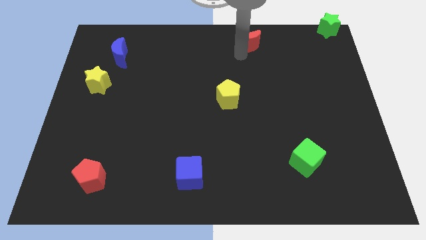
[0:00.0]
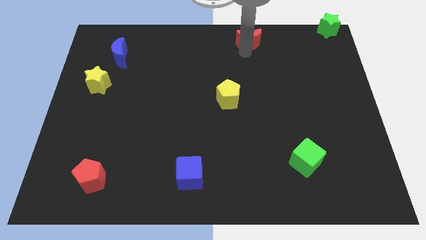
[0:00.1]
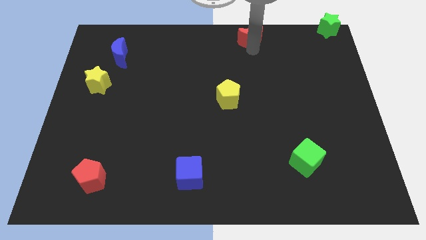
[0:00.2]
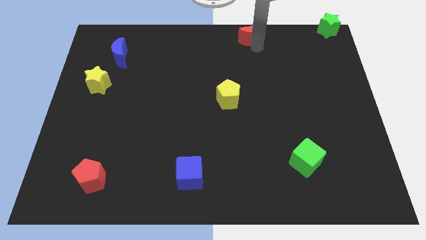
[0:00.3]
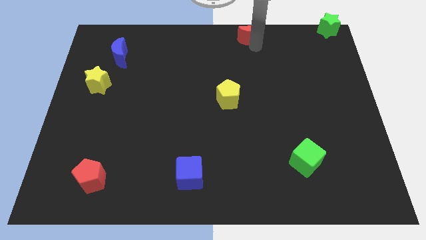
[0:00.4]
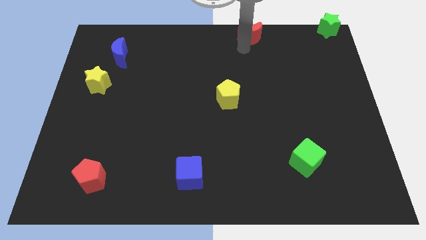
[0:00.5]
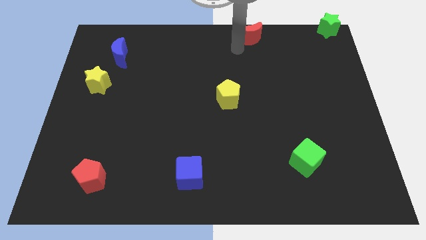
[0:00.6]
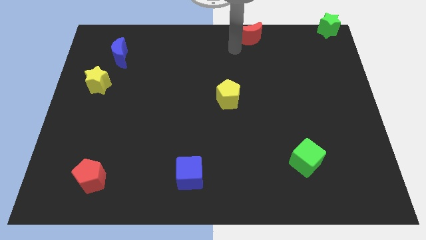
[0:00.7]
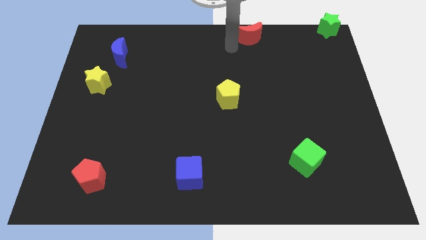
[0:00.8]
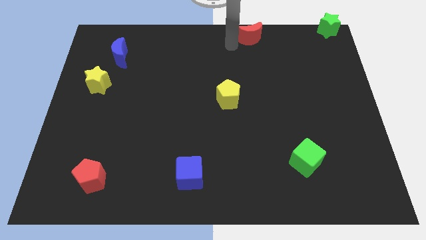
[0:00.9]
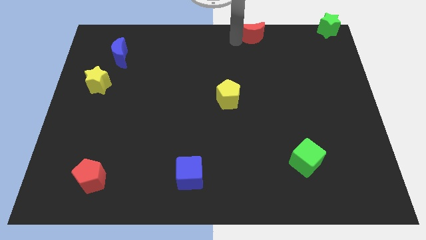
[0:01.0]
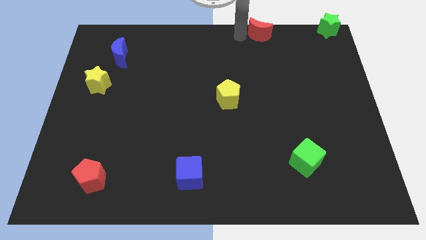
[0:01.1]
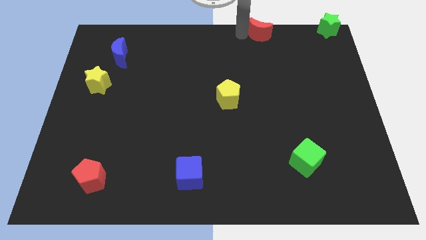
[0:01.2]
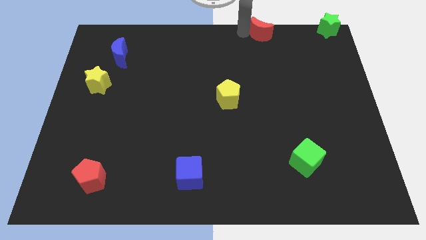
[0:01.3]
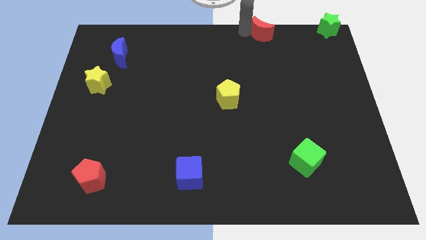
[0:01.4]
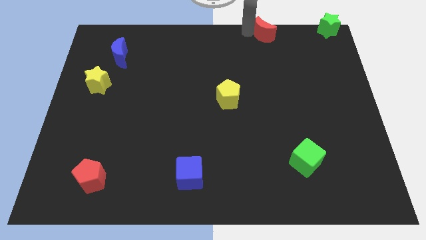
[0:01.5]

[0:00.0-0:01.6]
move the red crescent towards top left of the board

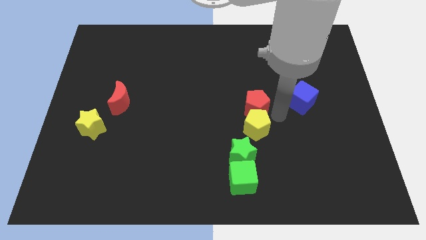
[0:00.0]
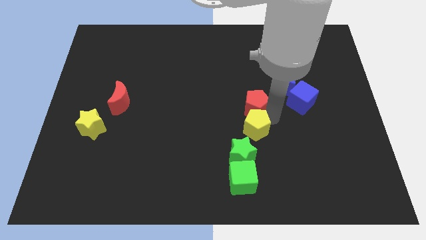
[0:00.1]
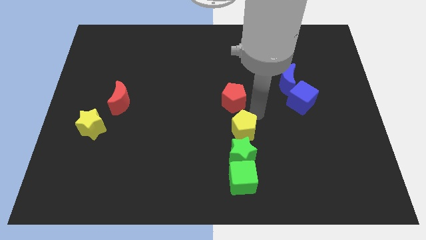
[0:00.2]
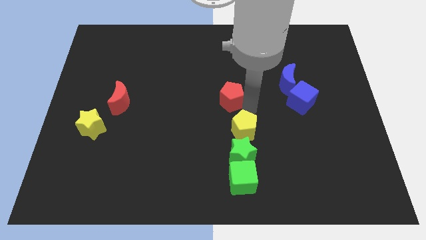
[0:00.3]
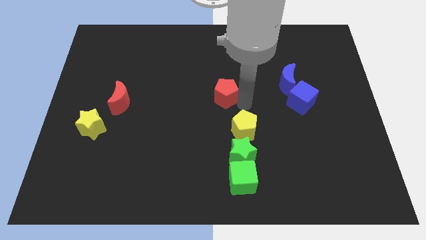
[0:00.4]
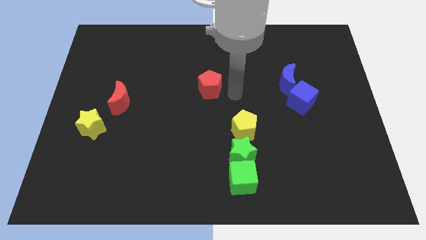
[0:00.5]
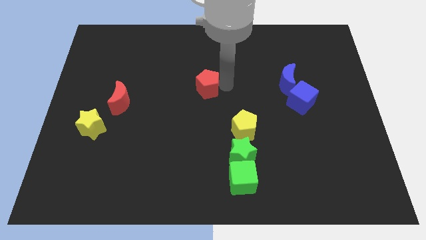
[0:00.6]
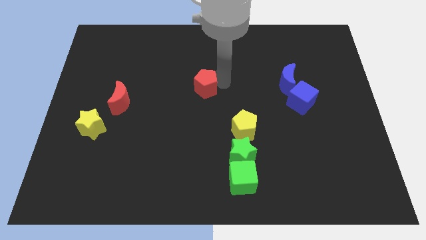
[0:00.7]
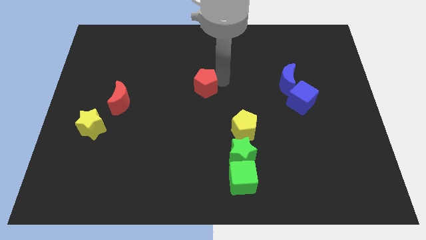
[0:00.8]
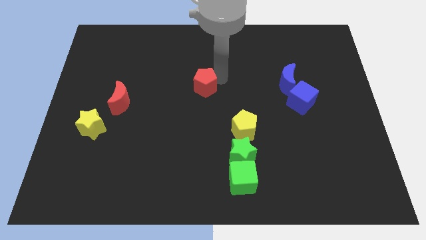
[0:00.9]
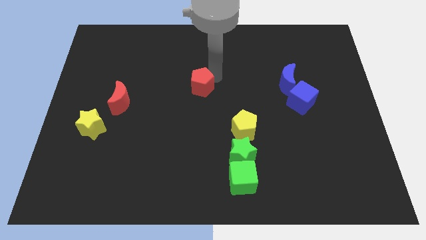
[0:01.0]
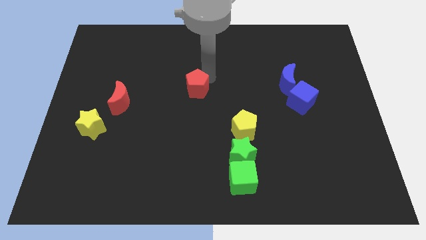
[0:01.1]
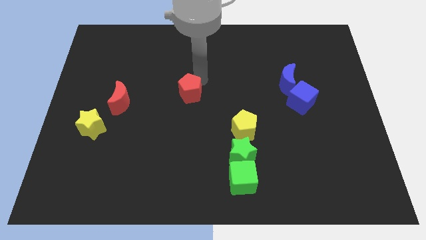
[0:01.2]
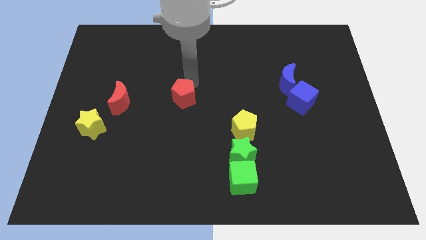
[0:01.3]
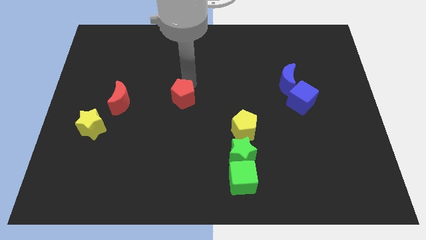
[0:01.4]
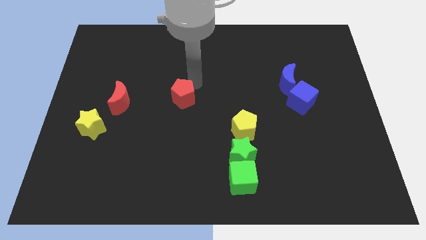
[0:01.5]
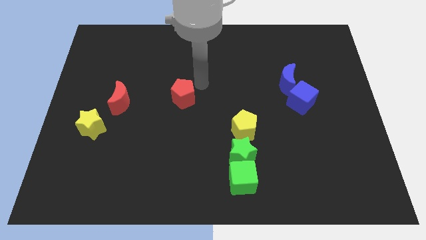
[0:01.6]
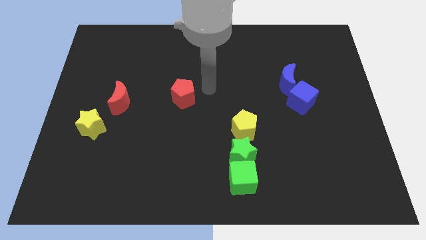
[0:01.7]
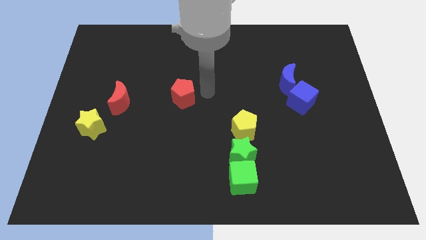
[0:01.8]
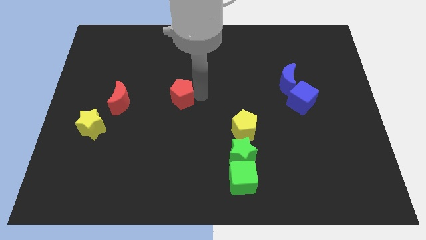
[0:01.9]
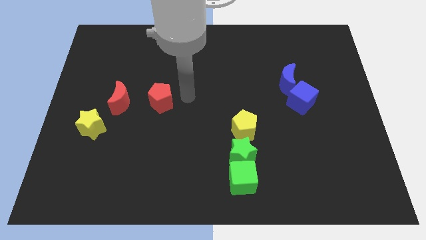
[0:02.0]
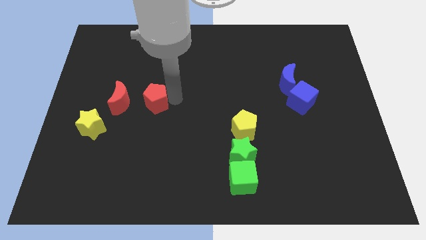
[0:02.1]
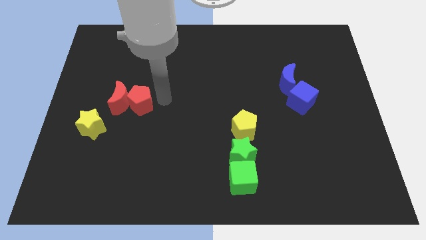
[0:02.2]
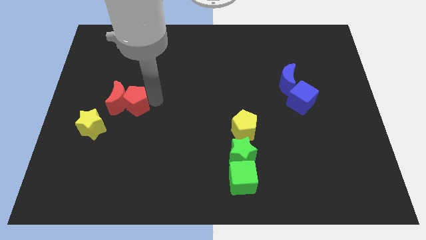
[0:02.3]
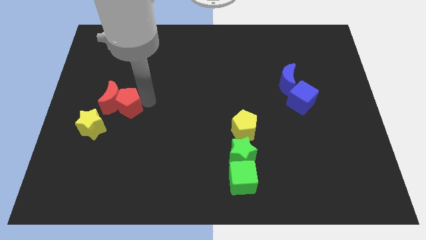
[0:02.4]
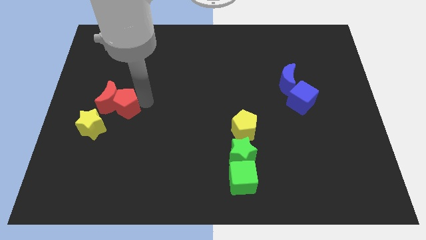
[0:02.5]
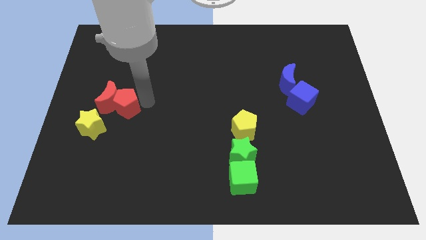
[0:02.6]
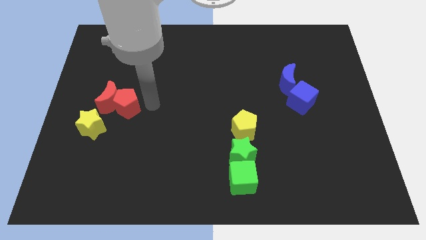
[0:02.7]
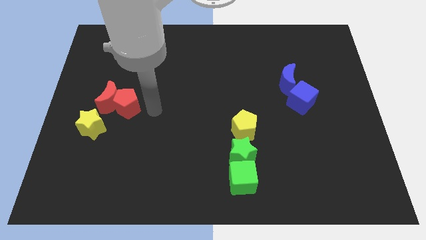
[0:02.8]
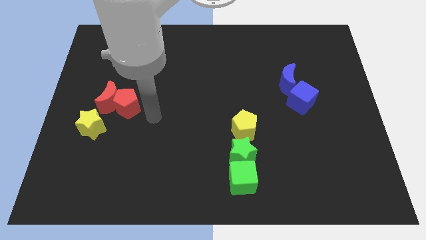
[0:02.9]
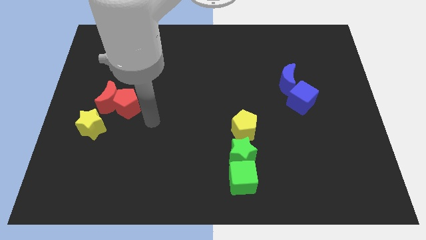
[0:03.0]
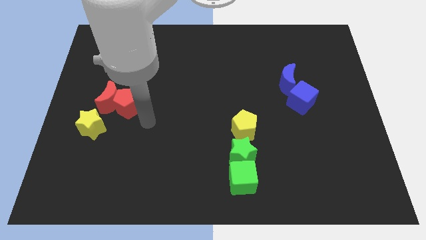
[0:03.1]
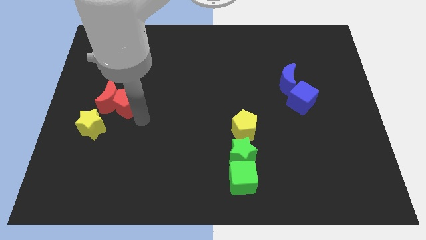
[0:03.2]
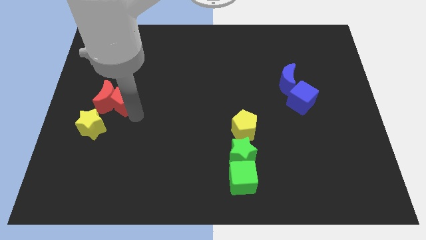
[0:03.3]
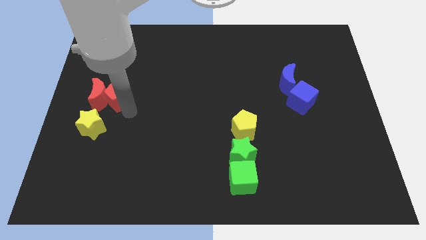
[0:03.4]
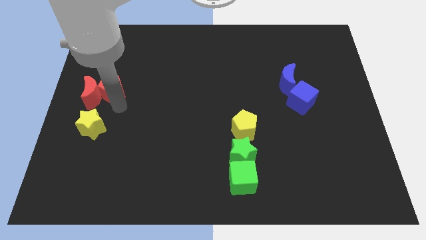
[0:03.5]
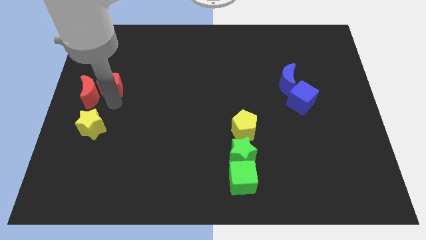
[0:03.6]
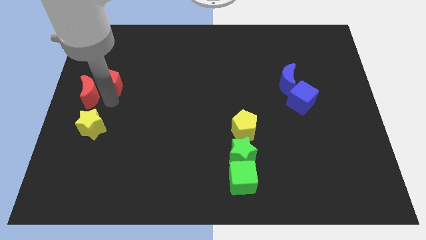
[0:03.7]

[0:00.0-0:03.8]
push the red crescent with the help of red pentagon

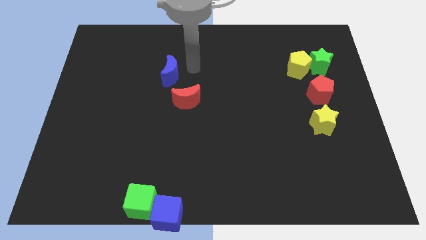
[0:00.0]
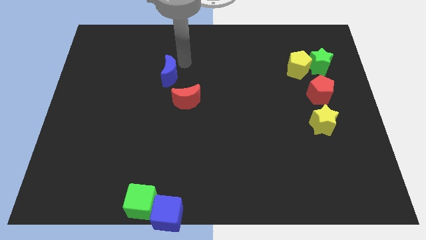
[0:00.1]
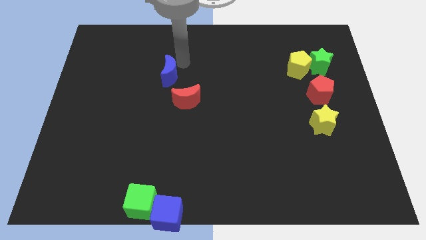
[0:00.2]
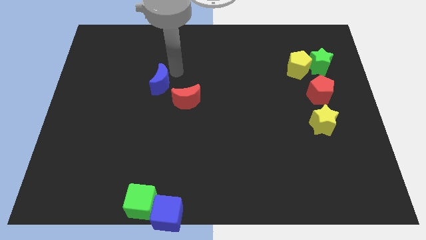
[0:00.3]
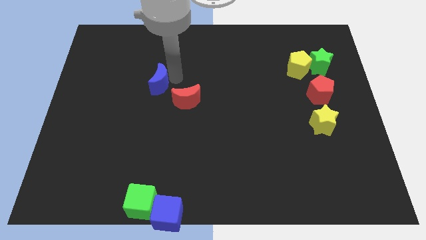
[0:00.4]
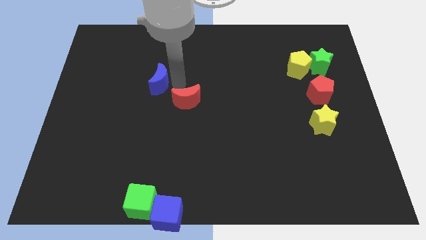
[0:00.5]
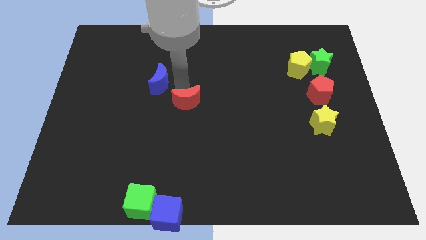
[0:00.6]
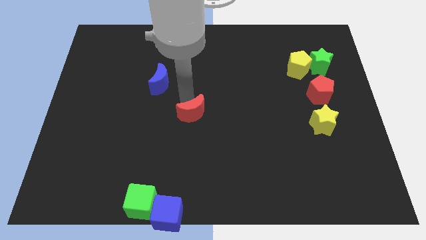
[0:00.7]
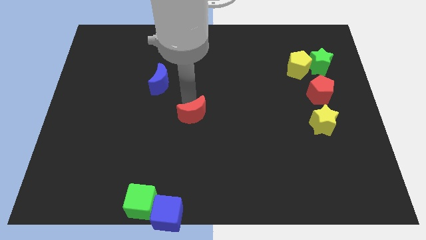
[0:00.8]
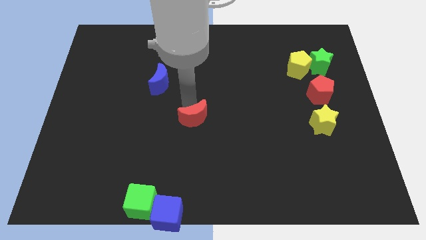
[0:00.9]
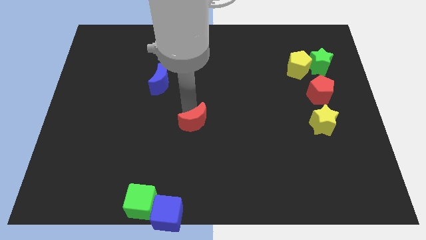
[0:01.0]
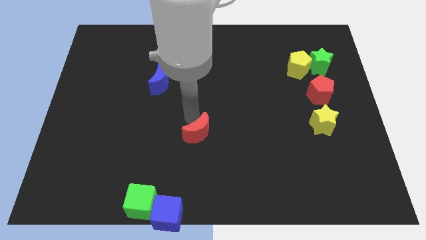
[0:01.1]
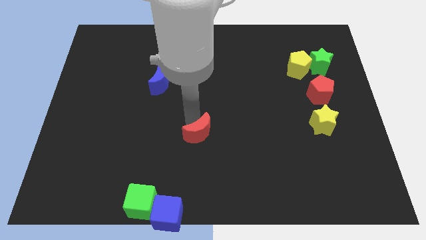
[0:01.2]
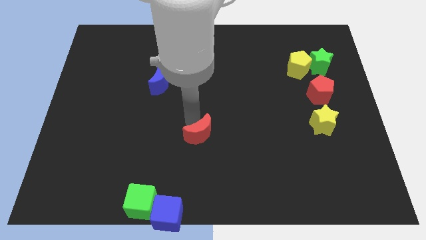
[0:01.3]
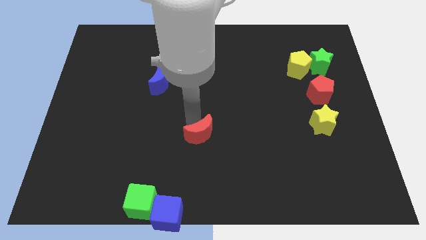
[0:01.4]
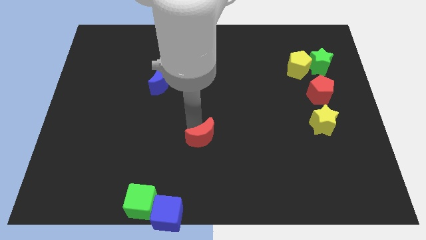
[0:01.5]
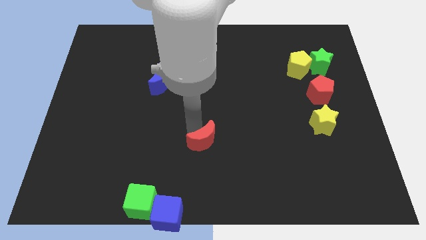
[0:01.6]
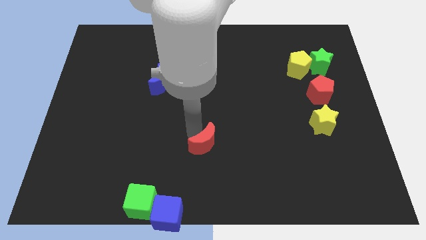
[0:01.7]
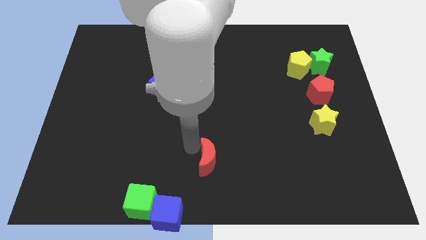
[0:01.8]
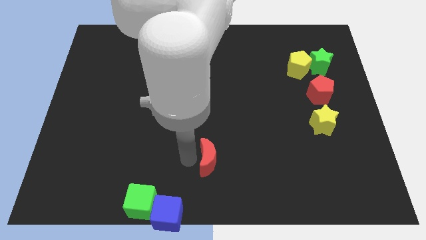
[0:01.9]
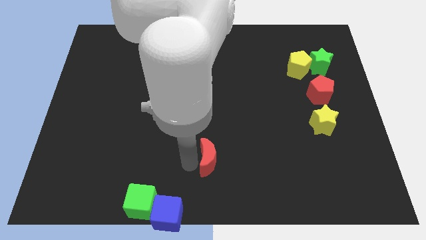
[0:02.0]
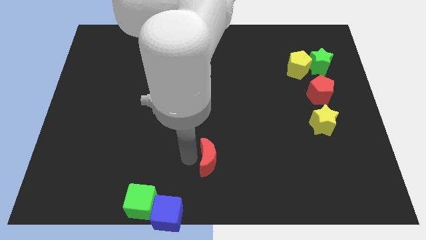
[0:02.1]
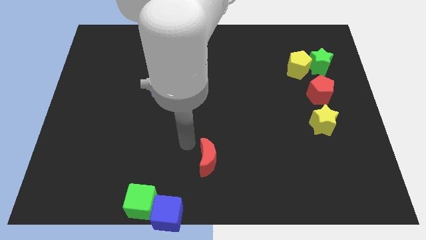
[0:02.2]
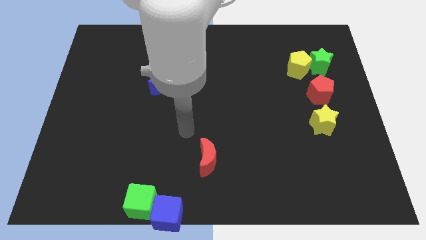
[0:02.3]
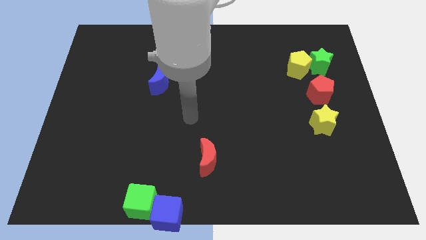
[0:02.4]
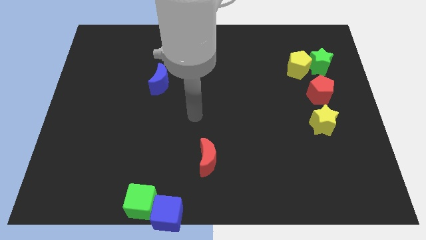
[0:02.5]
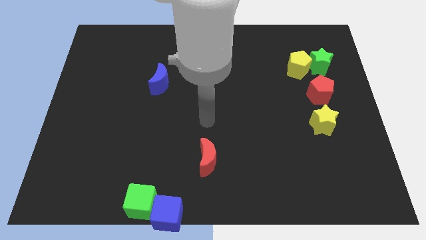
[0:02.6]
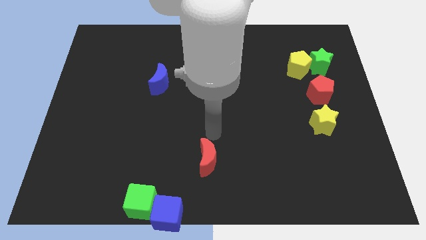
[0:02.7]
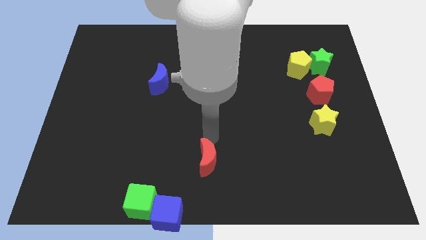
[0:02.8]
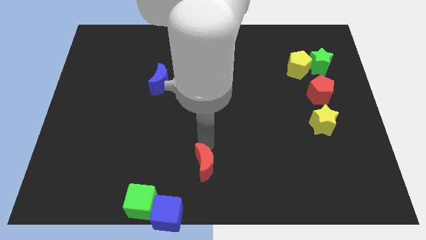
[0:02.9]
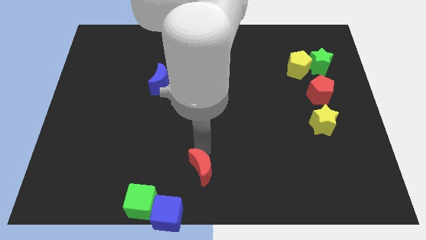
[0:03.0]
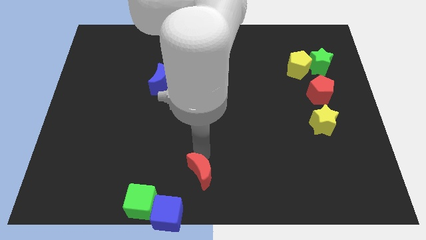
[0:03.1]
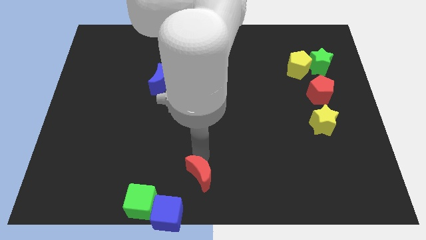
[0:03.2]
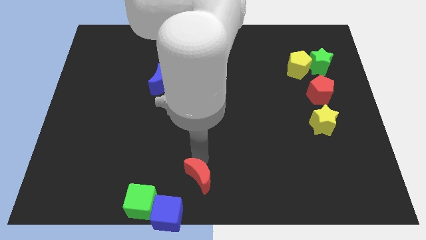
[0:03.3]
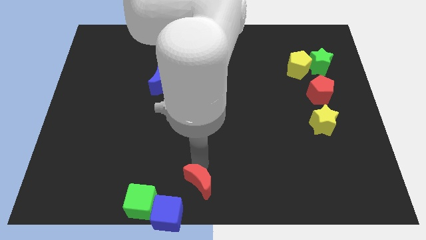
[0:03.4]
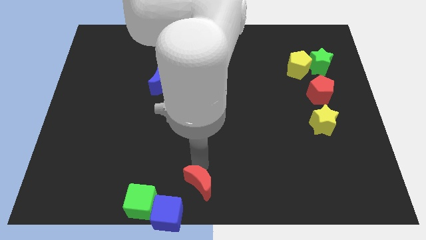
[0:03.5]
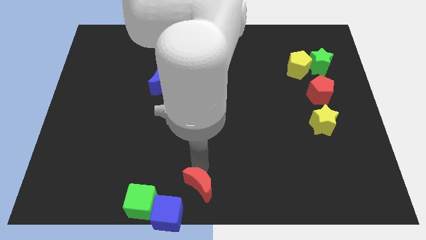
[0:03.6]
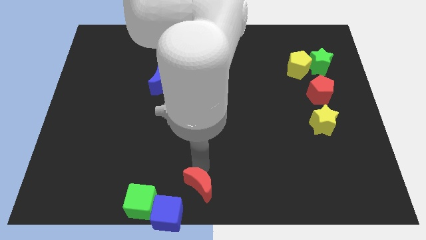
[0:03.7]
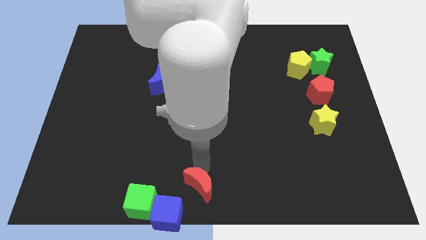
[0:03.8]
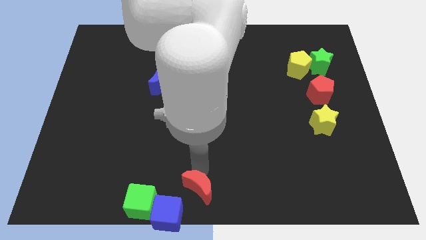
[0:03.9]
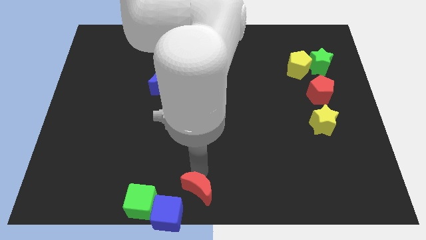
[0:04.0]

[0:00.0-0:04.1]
move the red crescent towards the right side of the blue cube
